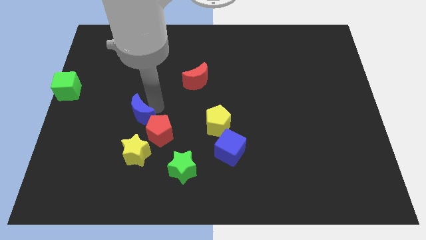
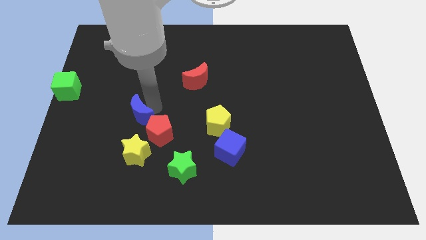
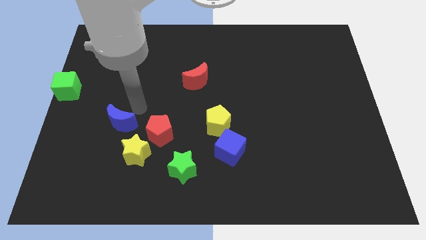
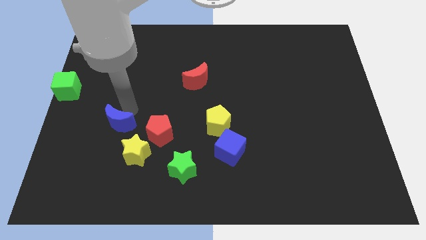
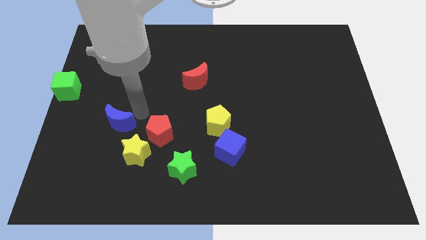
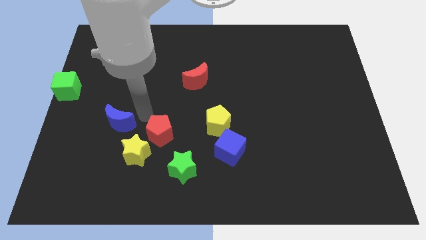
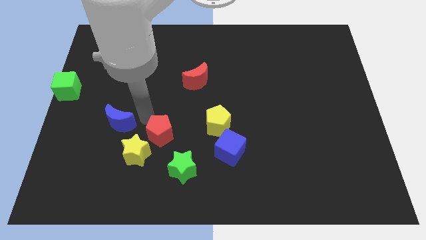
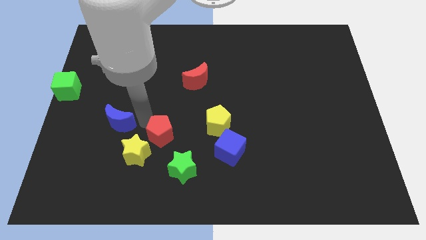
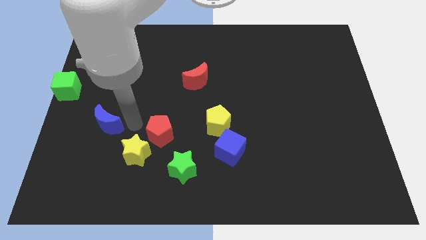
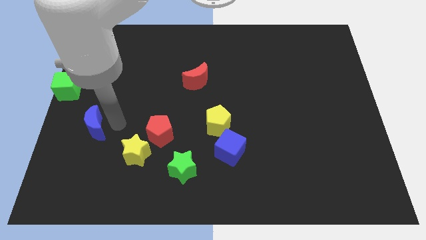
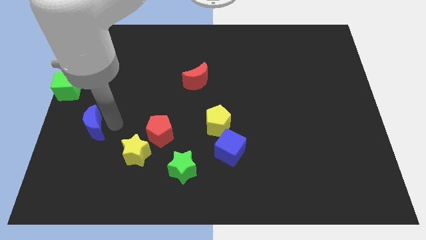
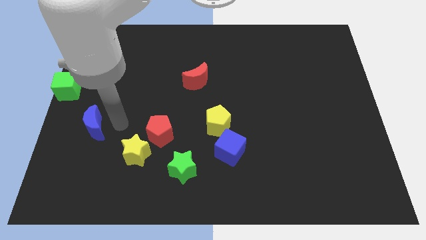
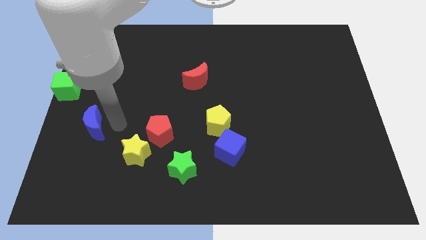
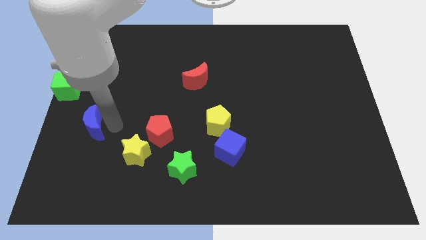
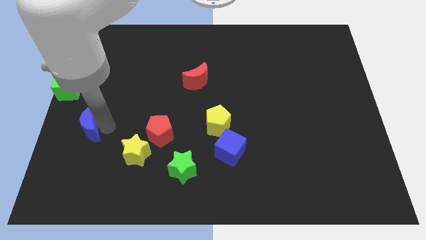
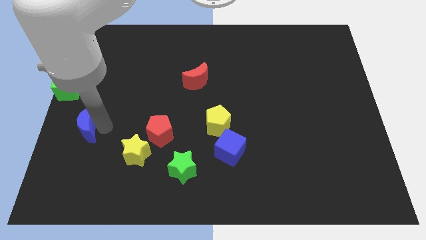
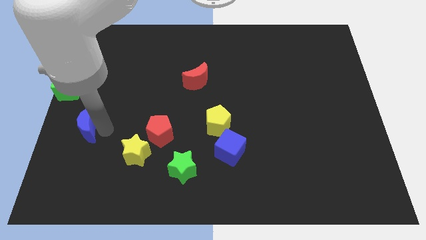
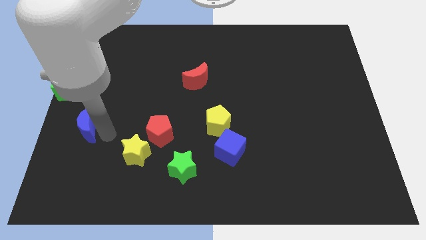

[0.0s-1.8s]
push the blue moon towards the center left

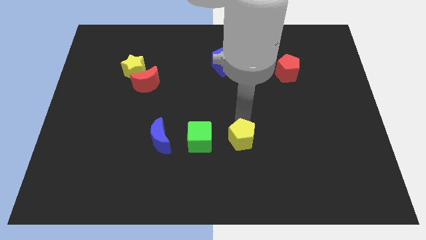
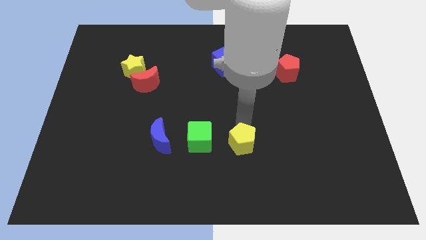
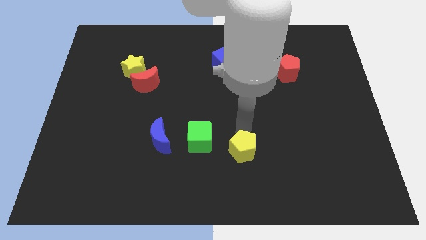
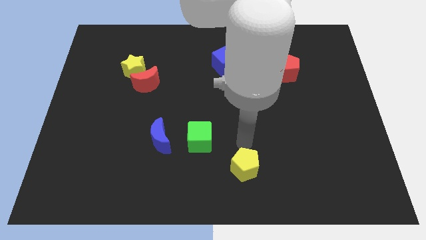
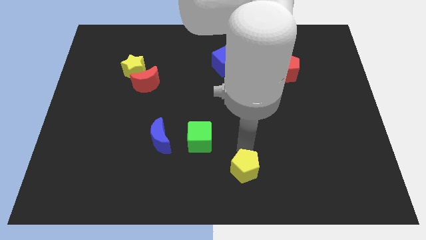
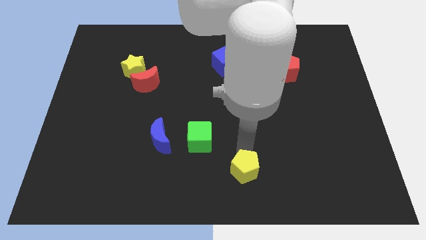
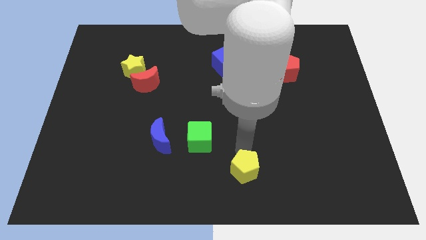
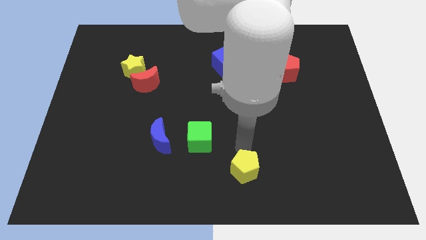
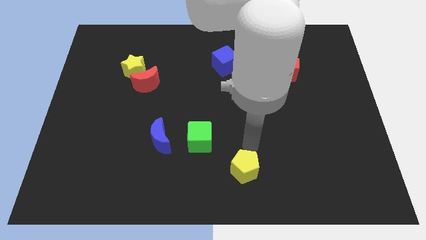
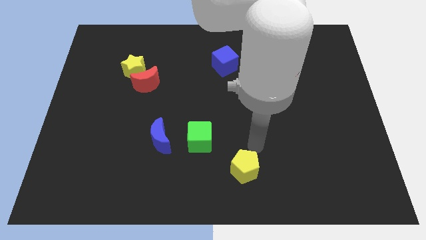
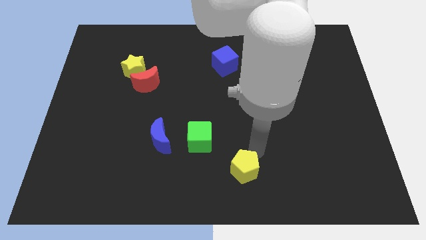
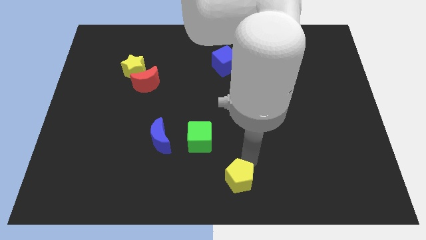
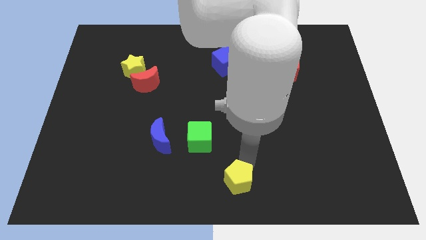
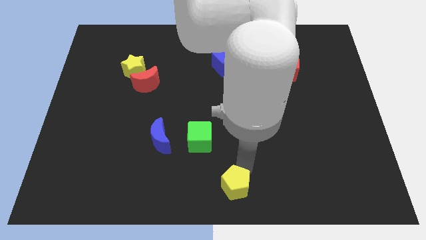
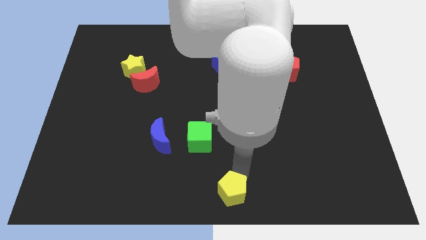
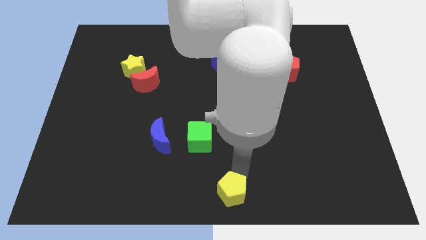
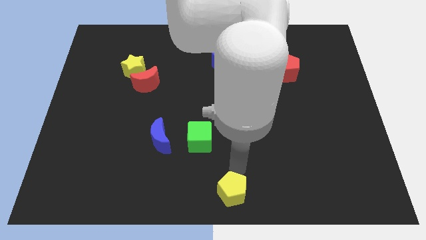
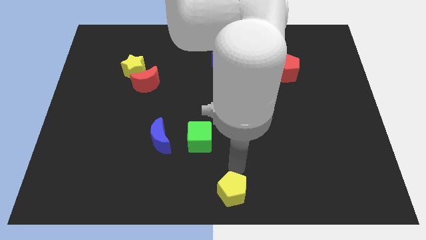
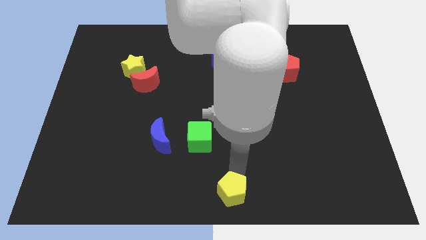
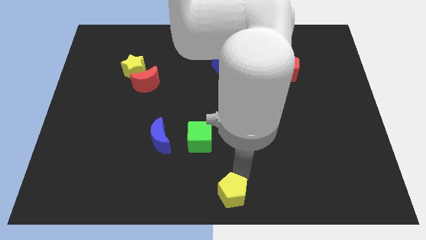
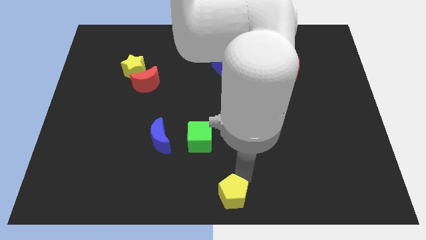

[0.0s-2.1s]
push the yellow pentagon to the bottom middle of the board

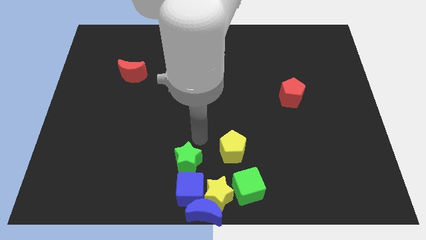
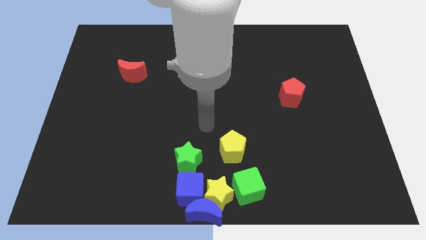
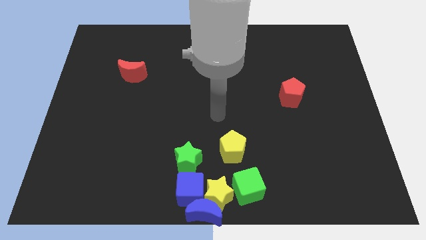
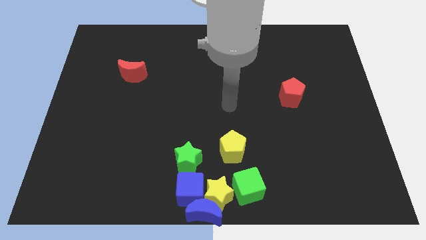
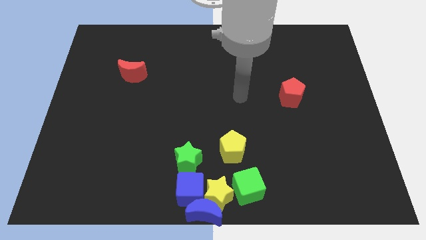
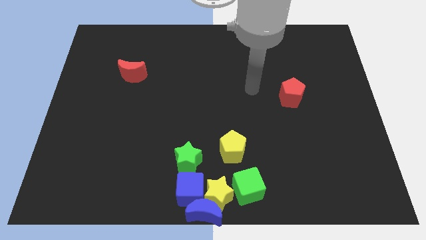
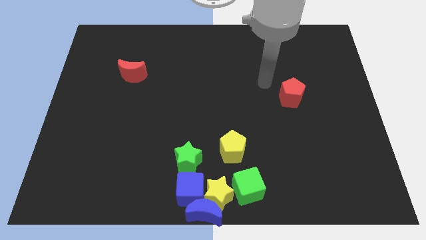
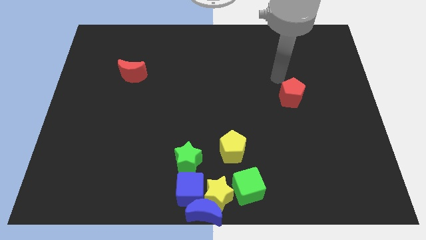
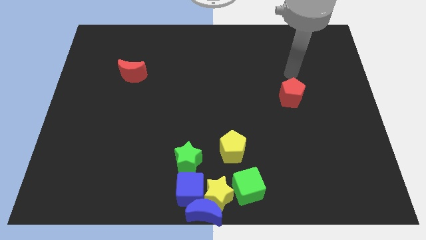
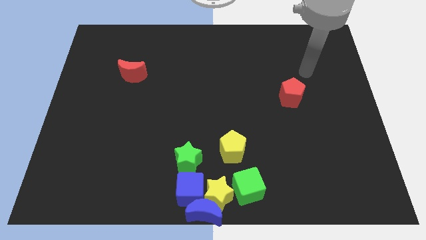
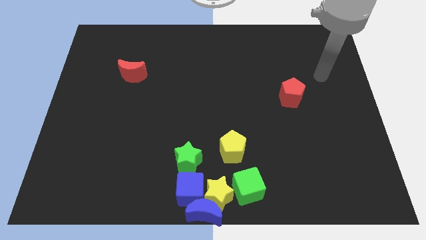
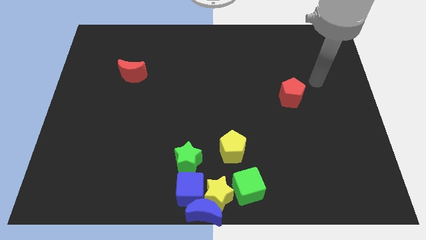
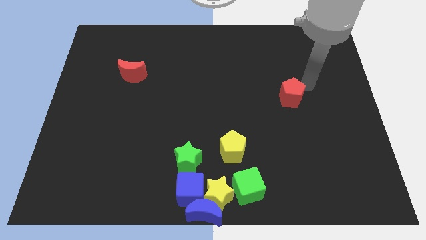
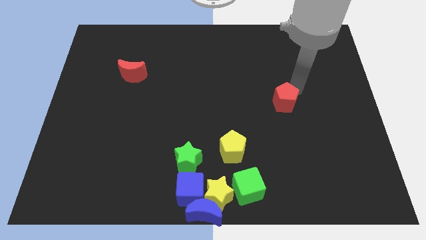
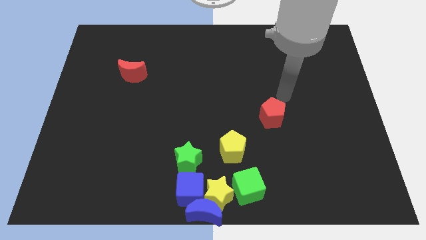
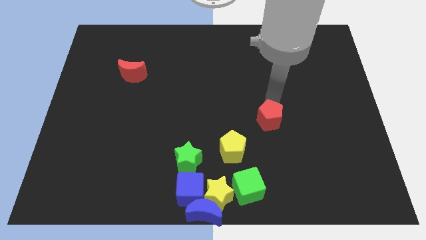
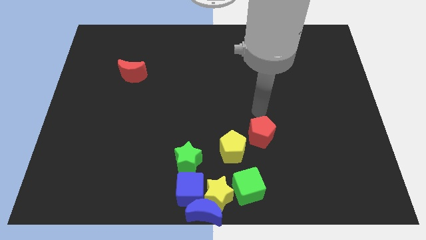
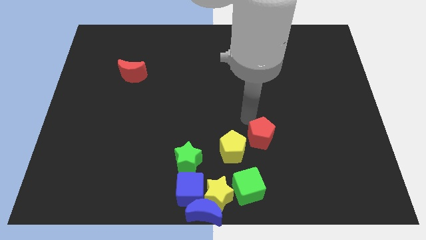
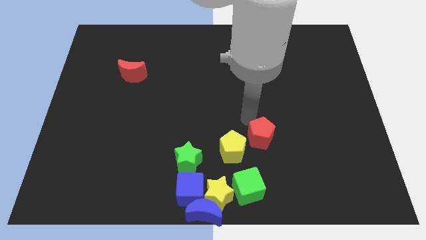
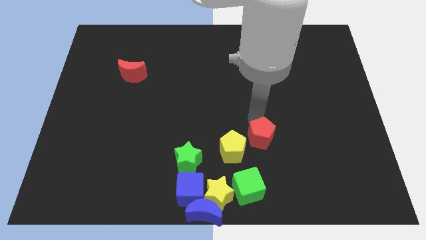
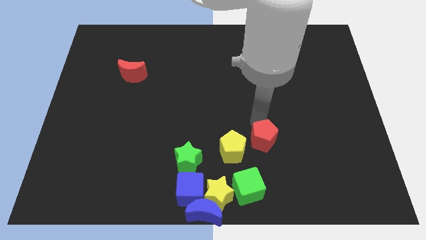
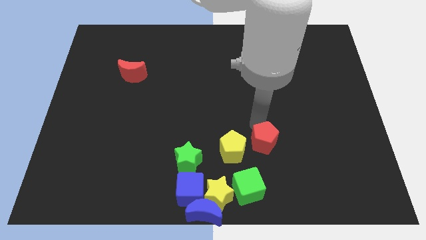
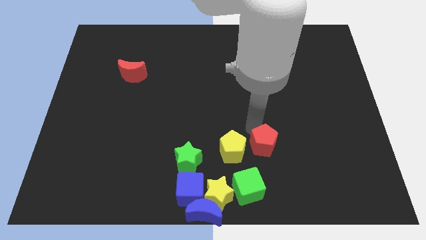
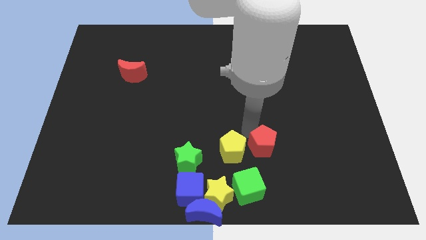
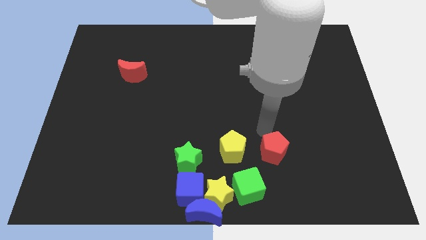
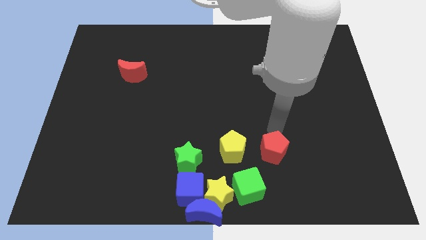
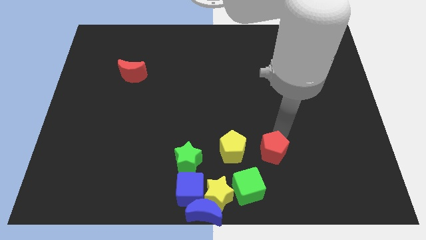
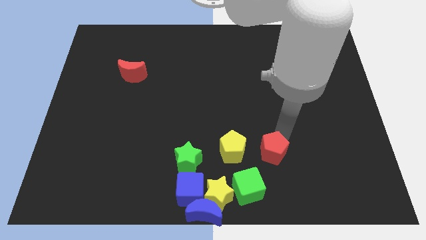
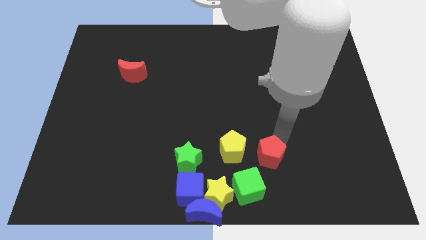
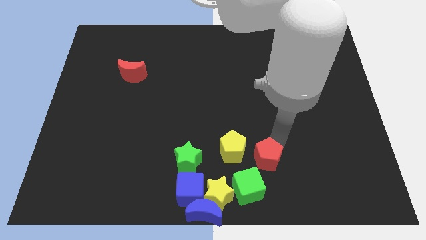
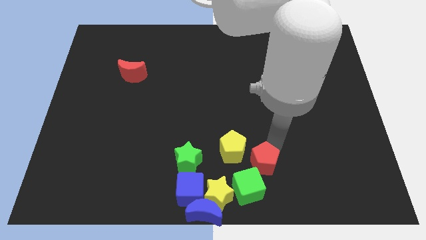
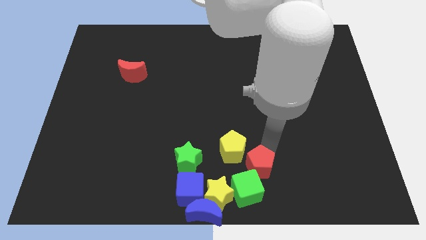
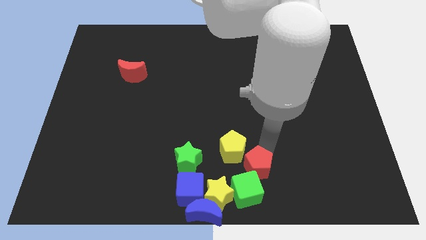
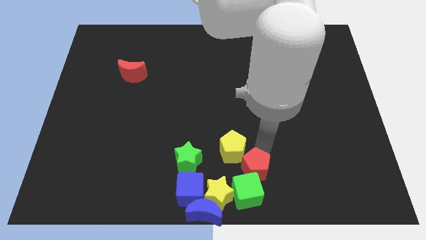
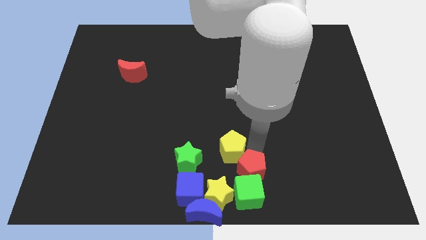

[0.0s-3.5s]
take the red pentagon into the green cube

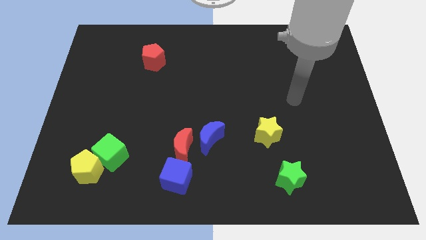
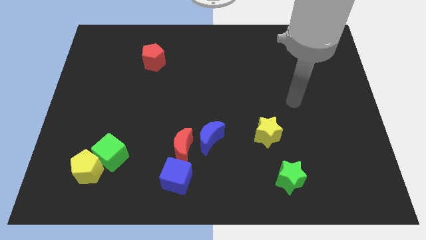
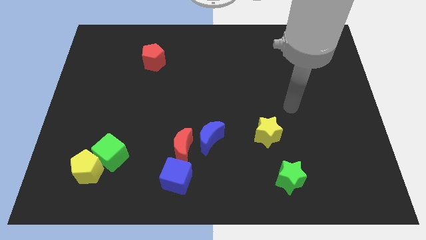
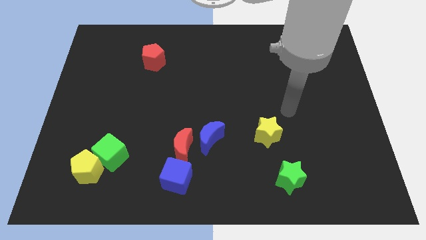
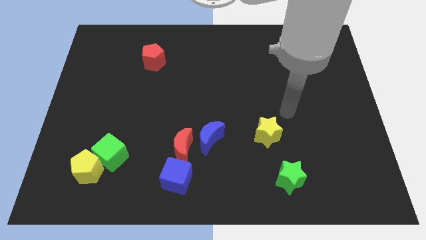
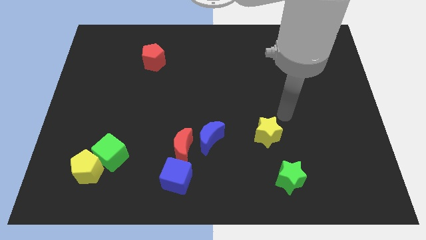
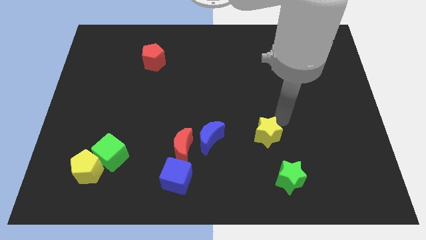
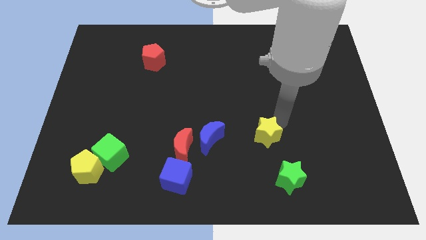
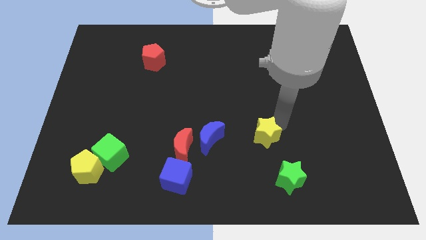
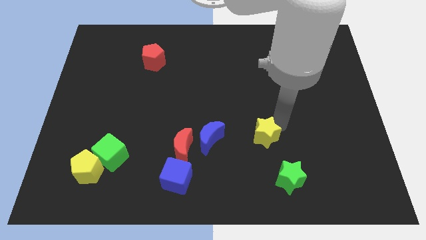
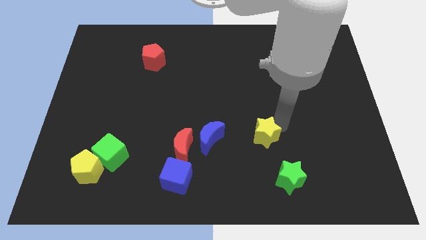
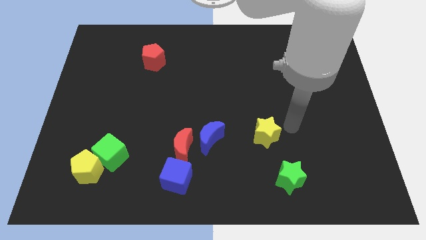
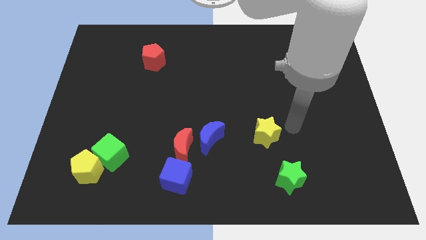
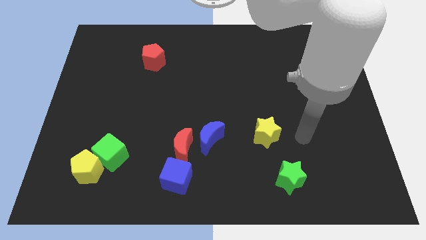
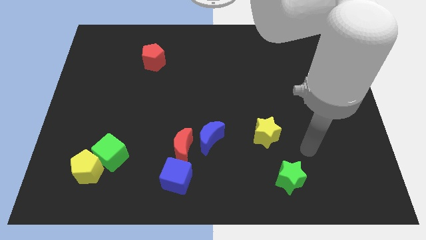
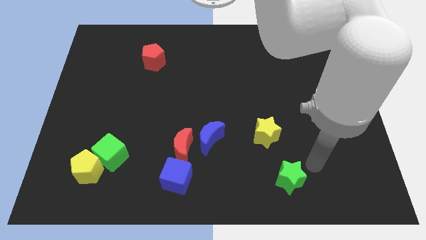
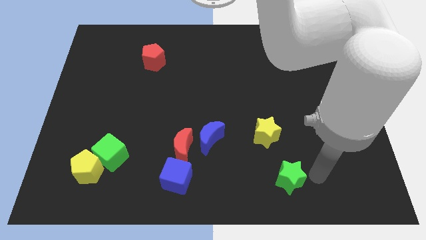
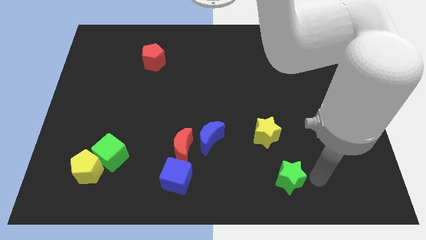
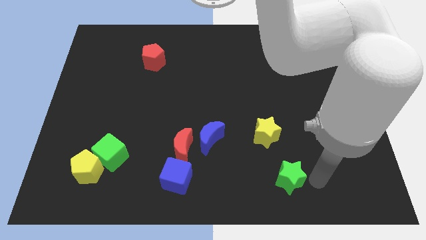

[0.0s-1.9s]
tap on the top of the yellow star
